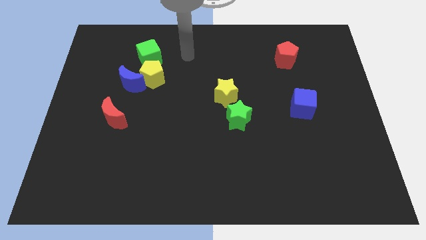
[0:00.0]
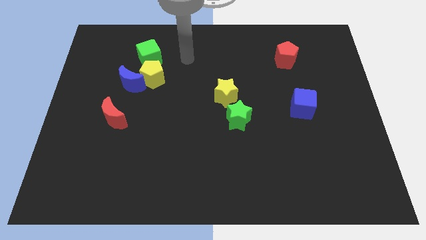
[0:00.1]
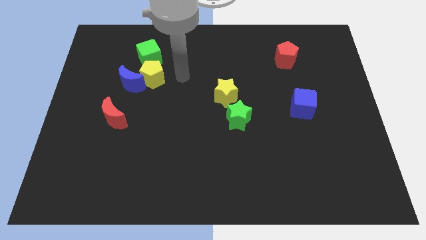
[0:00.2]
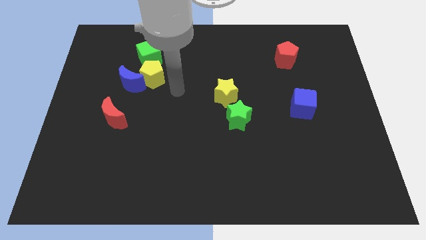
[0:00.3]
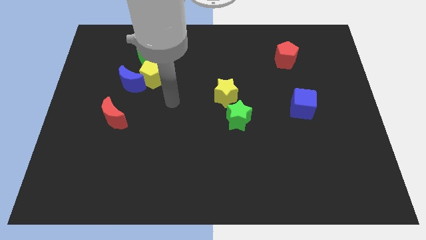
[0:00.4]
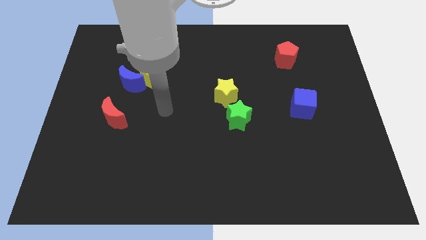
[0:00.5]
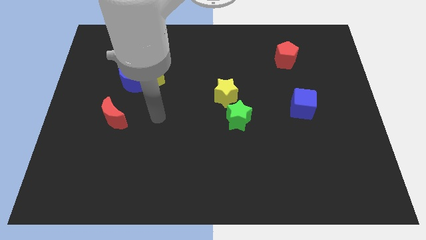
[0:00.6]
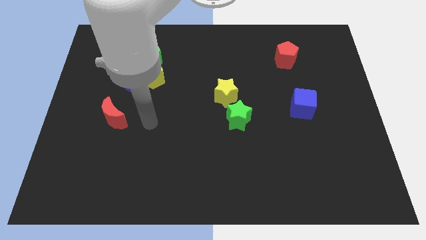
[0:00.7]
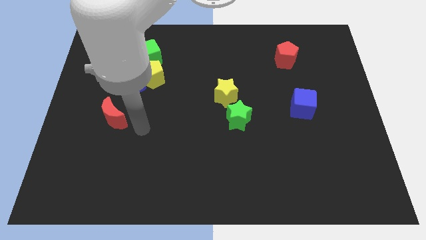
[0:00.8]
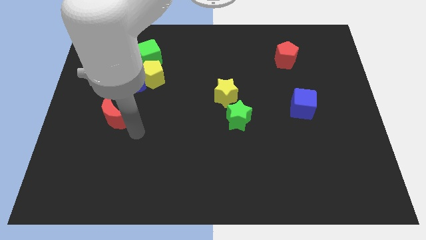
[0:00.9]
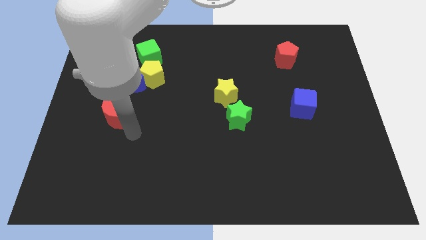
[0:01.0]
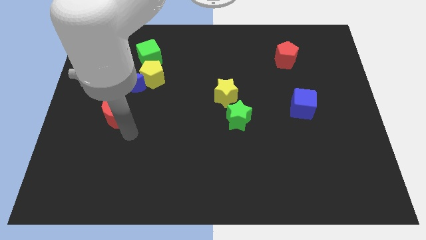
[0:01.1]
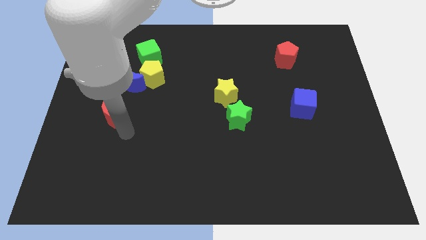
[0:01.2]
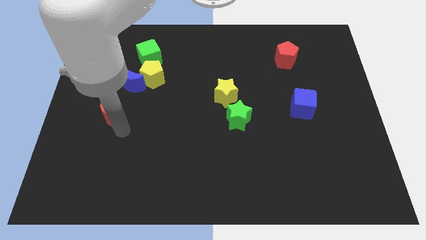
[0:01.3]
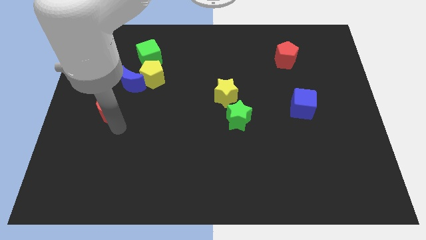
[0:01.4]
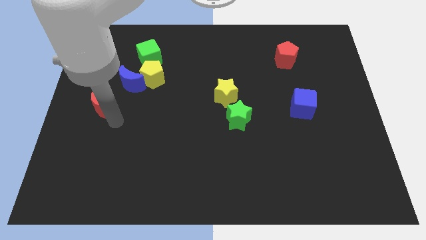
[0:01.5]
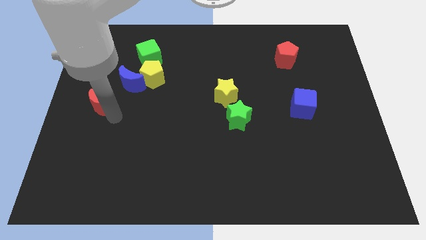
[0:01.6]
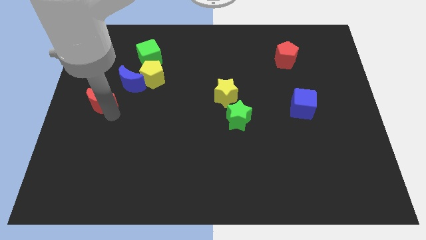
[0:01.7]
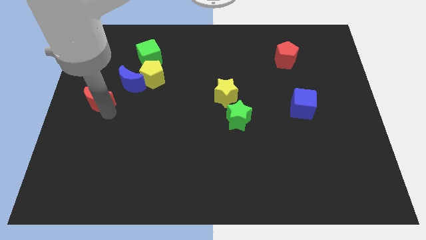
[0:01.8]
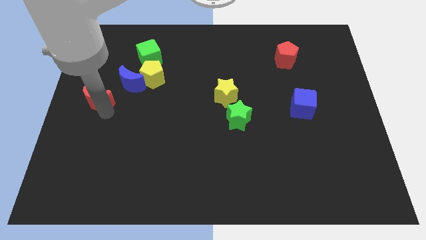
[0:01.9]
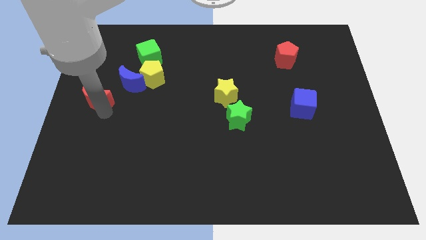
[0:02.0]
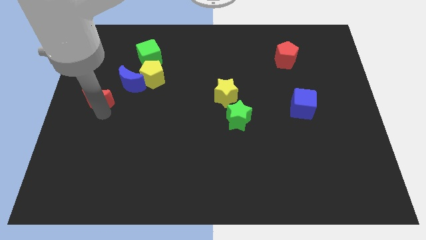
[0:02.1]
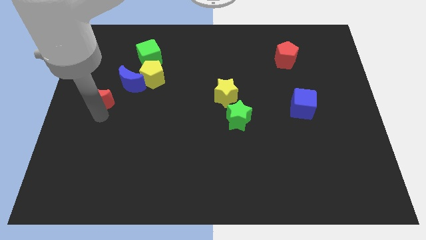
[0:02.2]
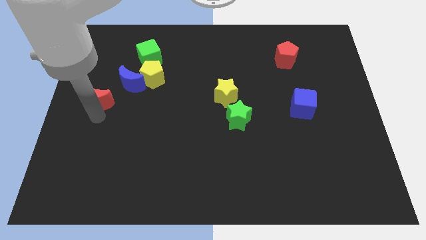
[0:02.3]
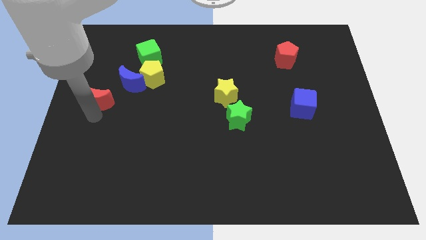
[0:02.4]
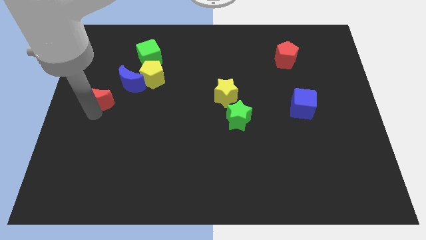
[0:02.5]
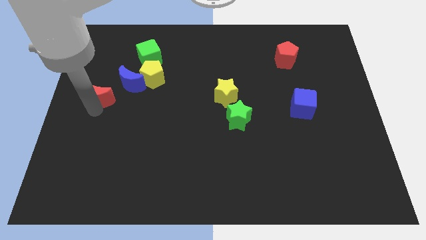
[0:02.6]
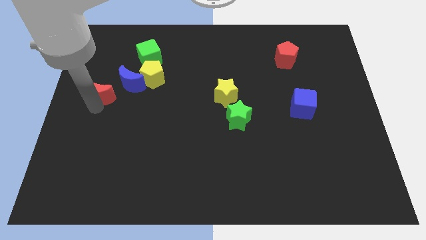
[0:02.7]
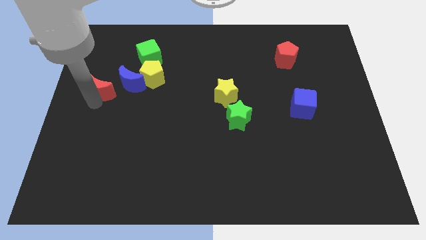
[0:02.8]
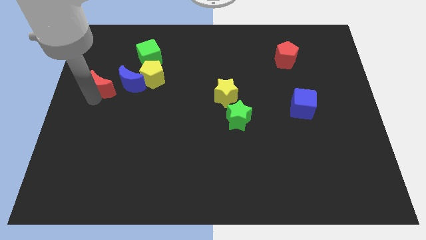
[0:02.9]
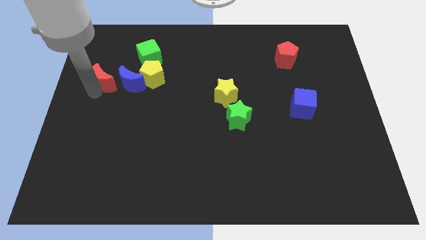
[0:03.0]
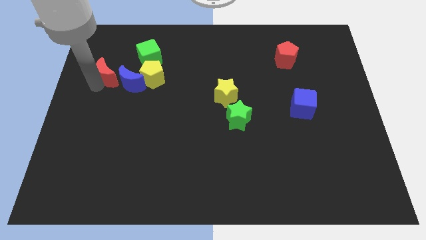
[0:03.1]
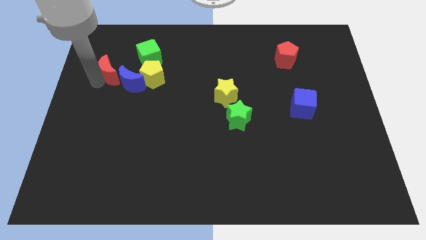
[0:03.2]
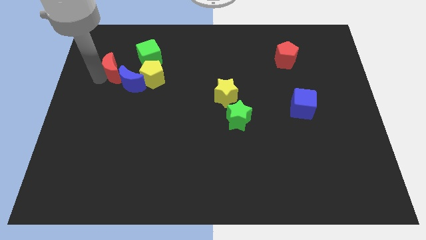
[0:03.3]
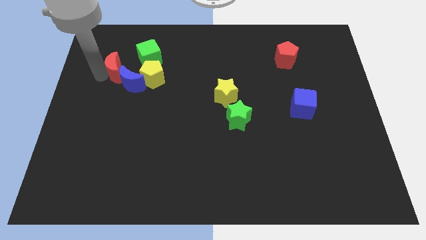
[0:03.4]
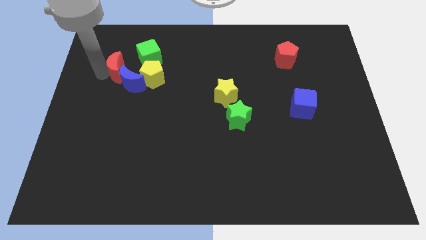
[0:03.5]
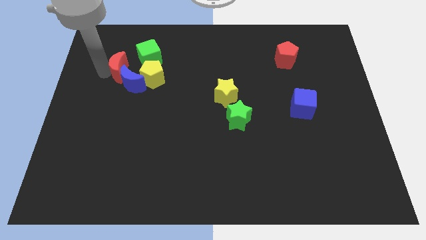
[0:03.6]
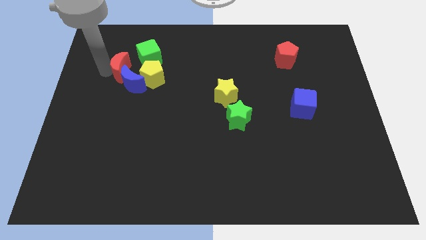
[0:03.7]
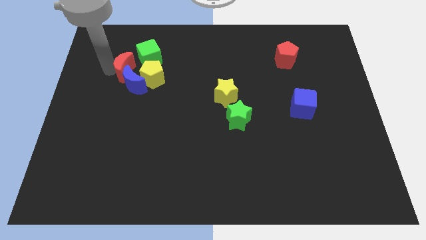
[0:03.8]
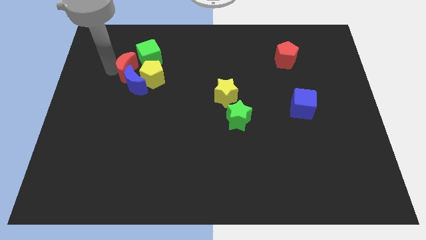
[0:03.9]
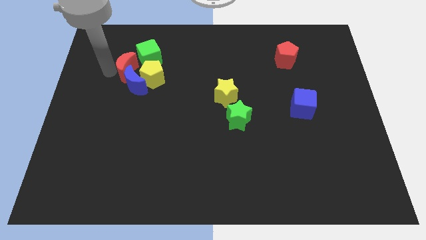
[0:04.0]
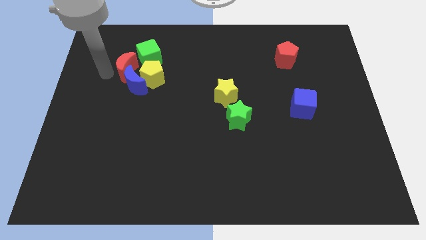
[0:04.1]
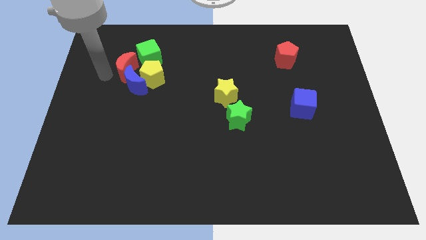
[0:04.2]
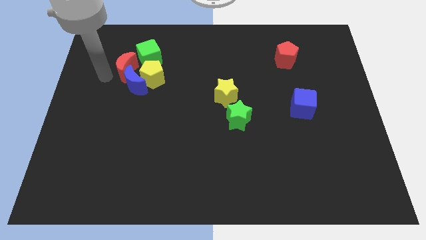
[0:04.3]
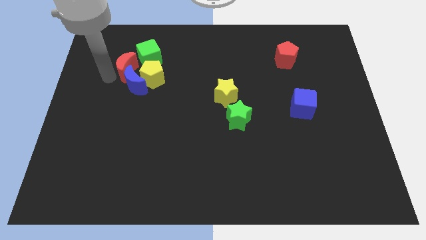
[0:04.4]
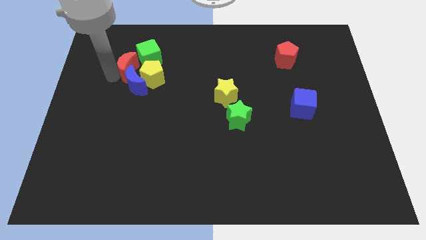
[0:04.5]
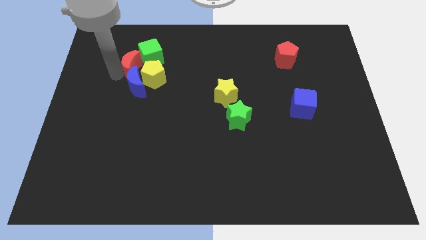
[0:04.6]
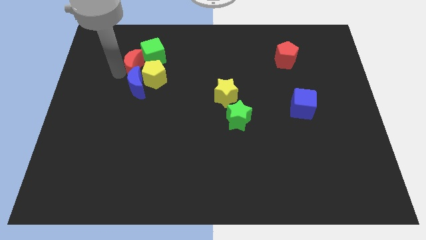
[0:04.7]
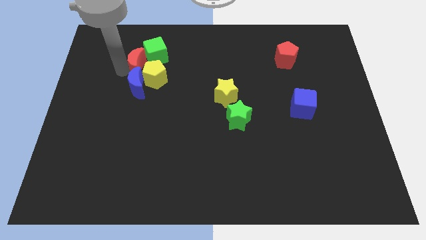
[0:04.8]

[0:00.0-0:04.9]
put the red moon towards the green cube

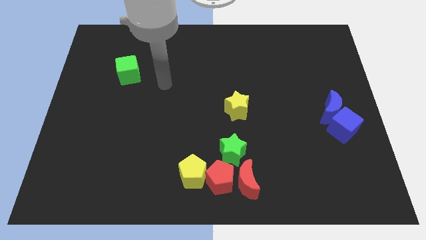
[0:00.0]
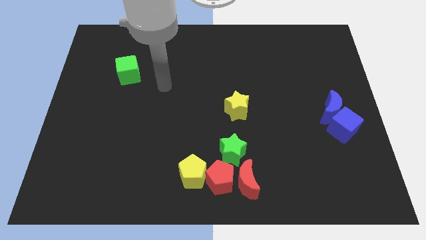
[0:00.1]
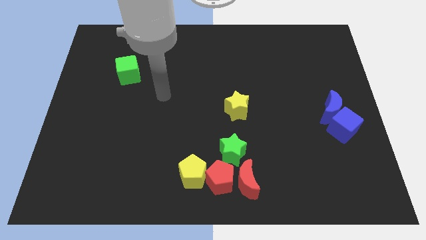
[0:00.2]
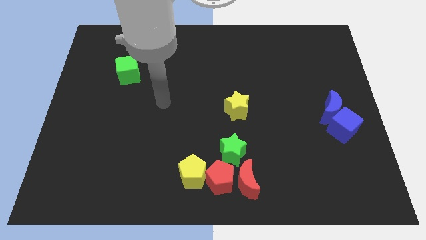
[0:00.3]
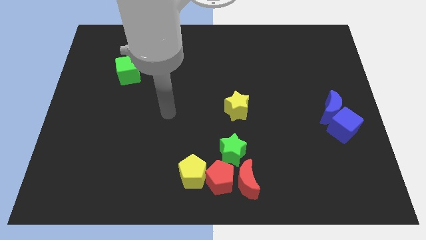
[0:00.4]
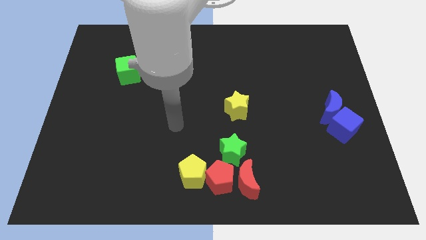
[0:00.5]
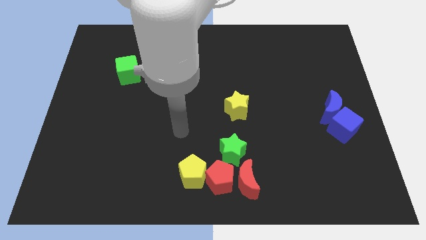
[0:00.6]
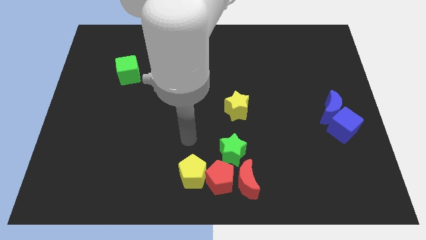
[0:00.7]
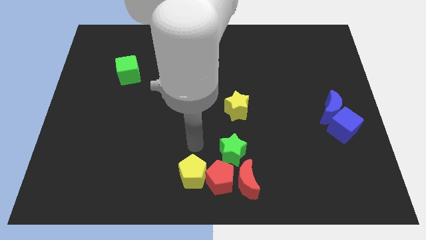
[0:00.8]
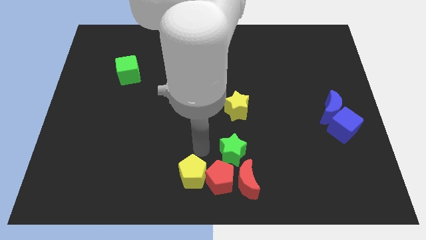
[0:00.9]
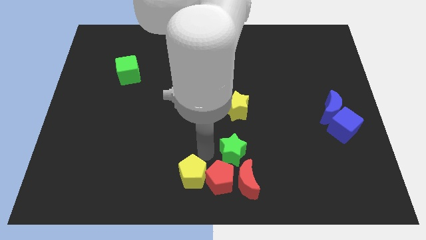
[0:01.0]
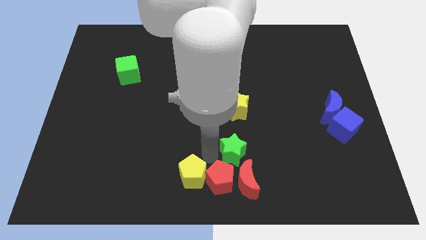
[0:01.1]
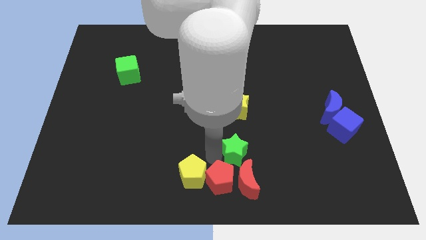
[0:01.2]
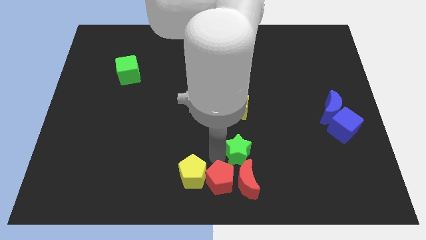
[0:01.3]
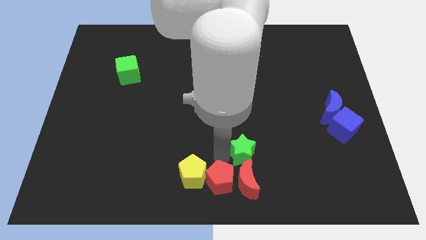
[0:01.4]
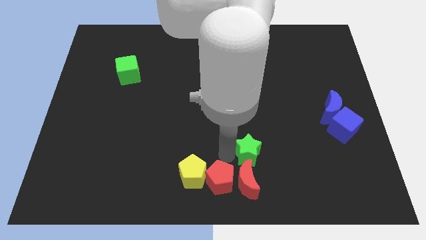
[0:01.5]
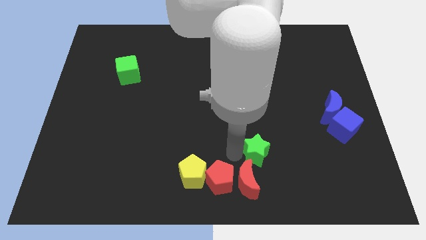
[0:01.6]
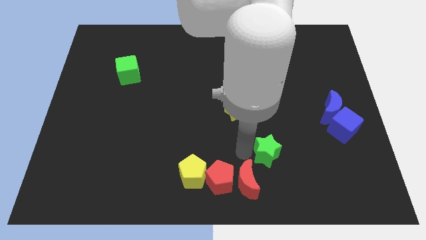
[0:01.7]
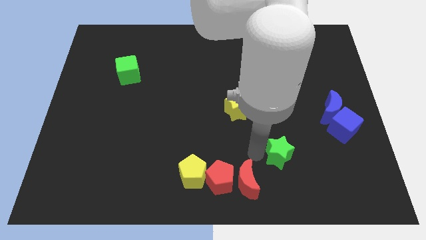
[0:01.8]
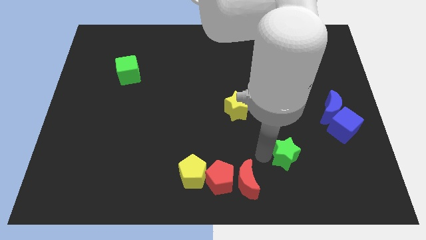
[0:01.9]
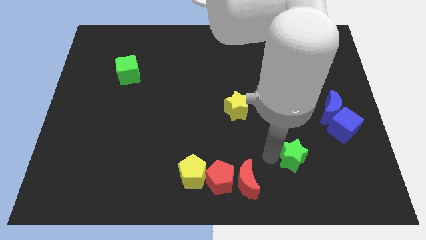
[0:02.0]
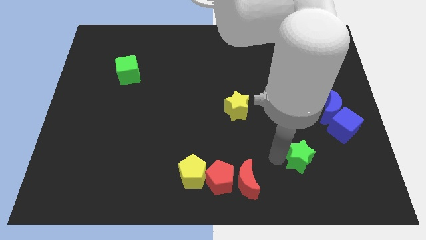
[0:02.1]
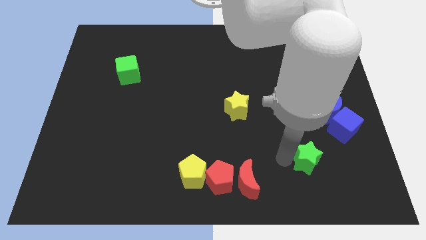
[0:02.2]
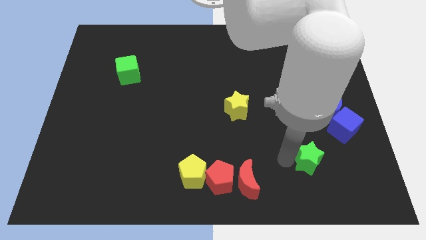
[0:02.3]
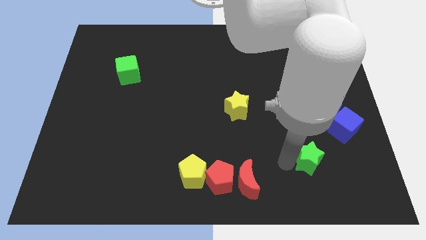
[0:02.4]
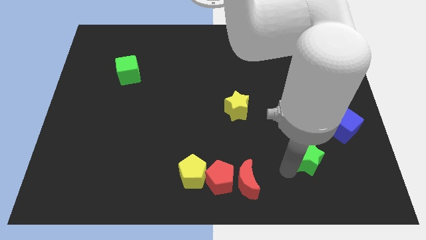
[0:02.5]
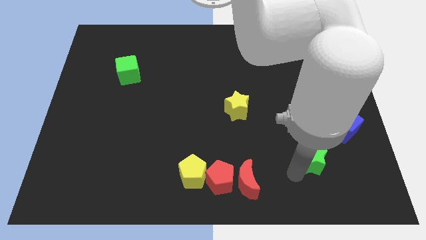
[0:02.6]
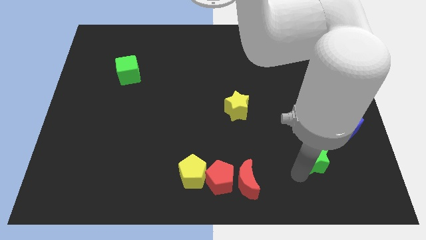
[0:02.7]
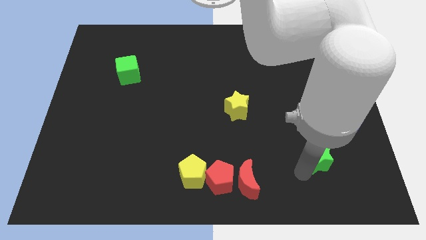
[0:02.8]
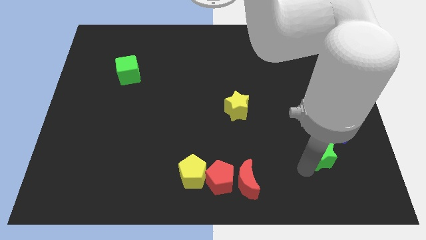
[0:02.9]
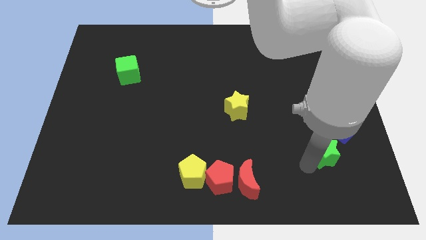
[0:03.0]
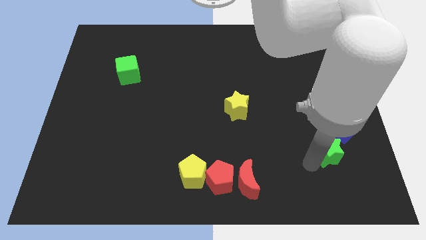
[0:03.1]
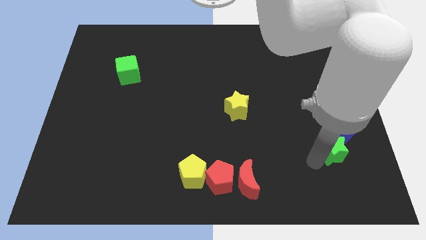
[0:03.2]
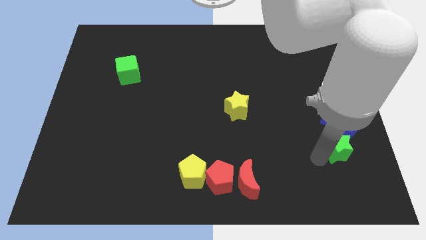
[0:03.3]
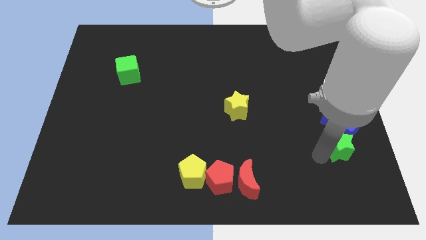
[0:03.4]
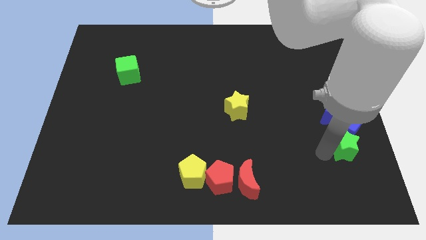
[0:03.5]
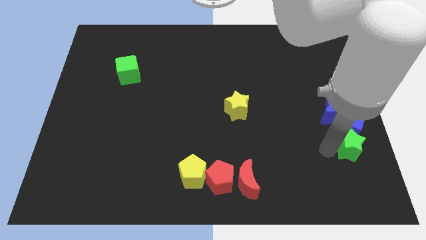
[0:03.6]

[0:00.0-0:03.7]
slide the green star close to the blue cube
